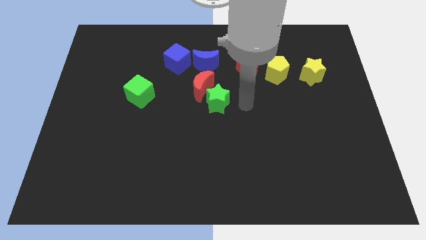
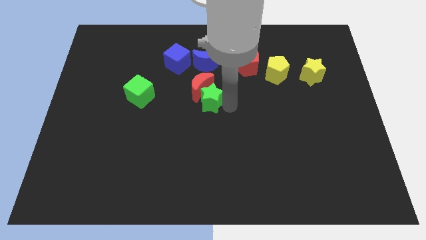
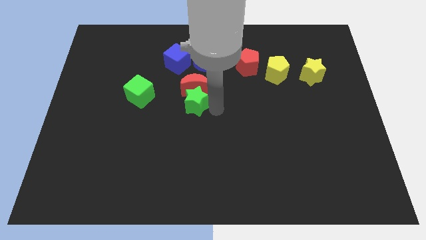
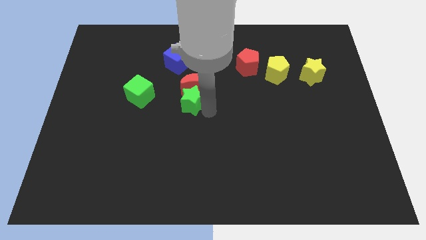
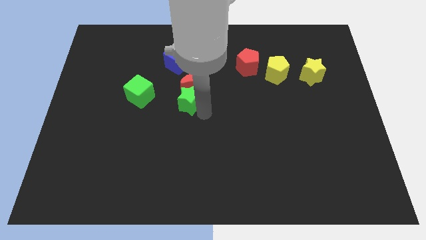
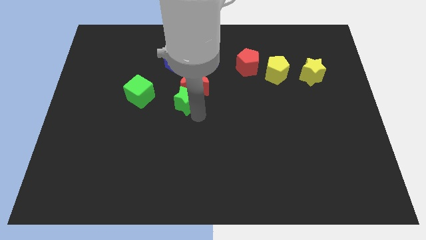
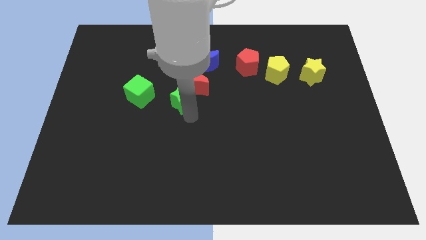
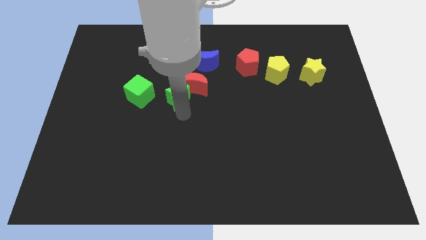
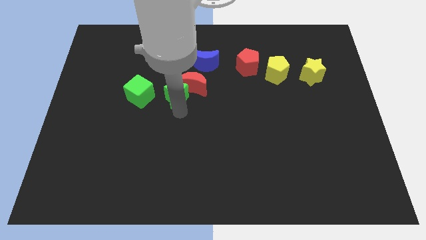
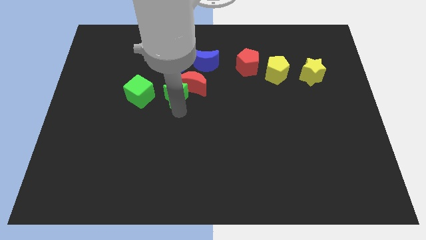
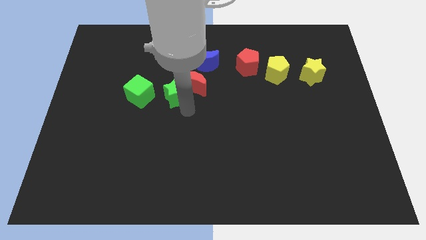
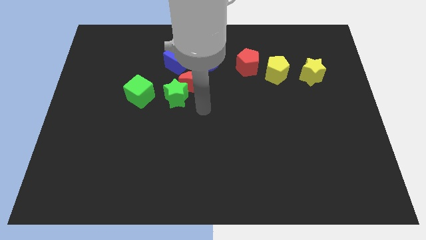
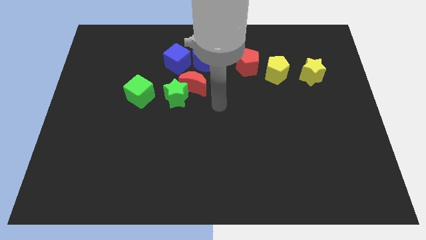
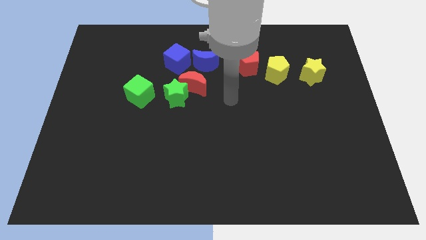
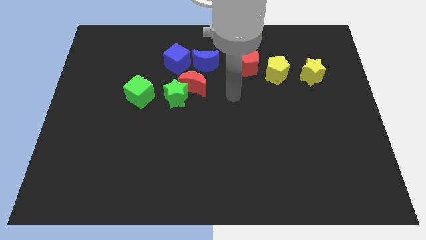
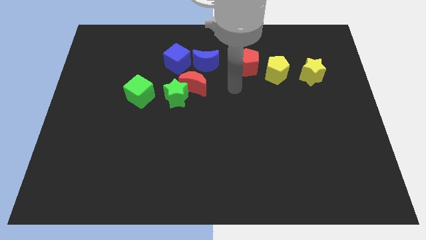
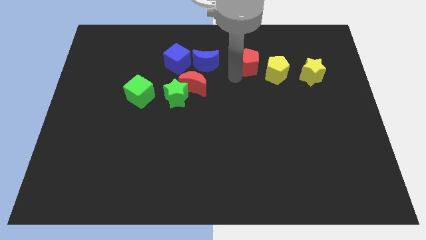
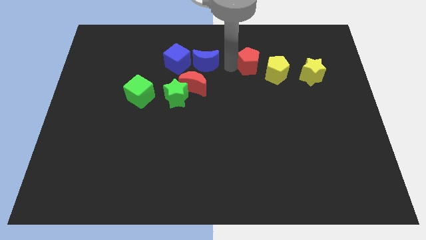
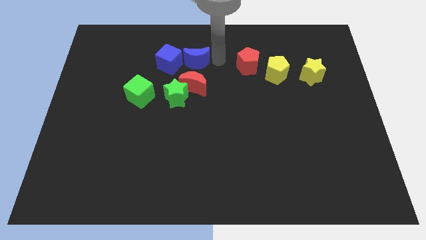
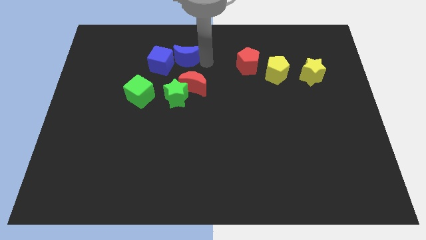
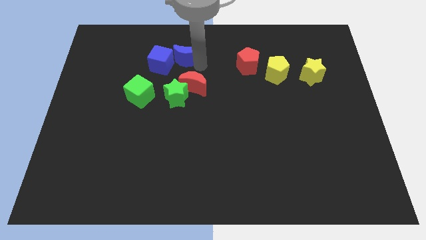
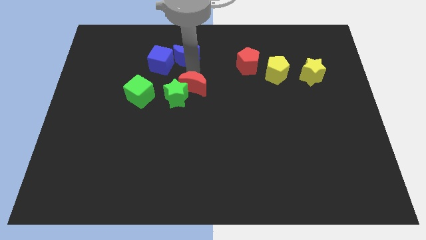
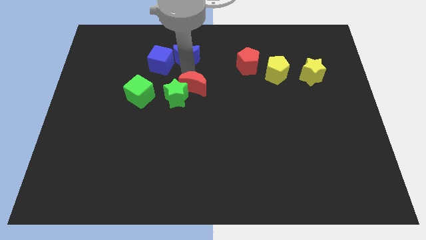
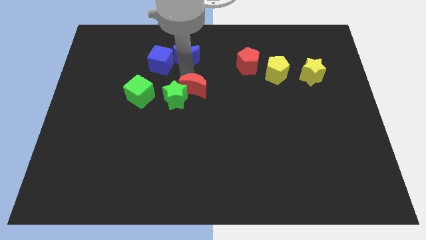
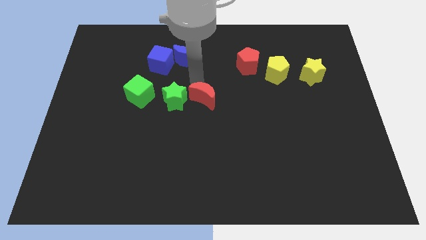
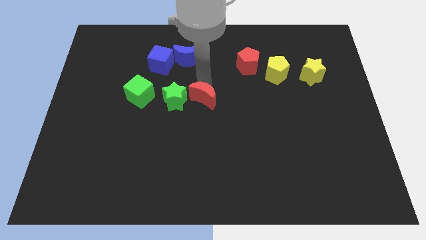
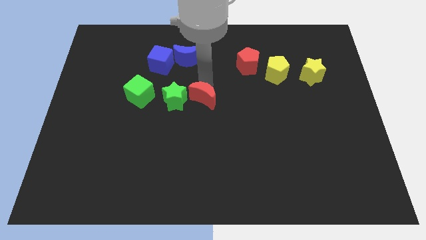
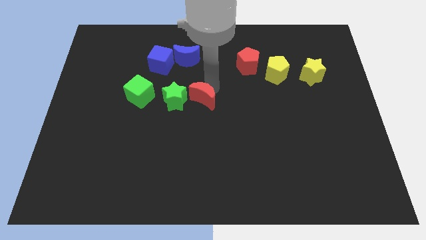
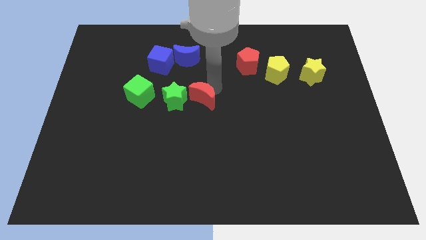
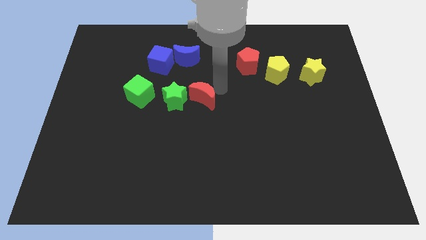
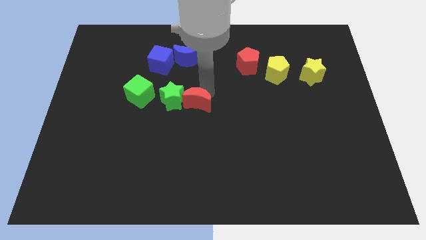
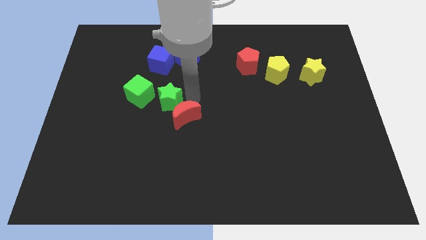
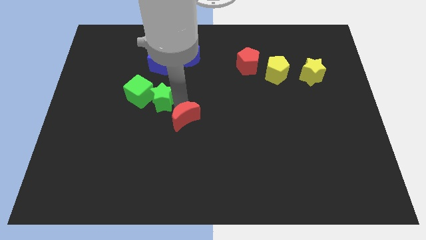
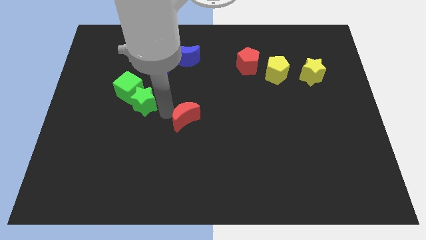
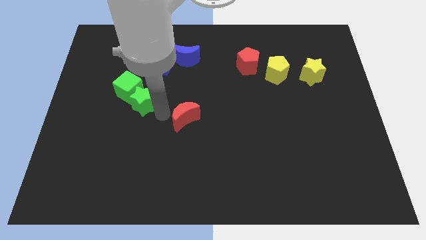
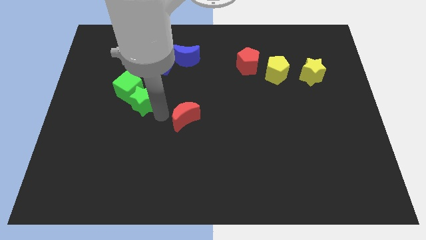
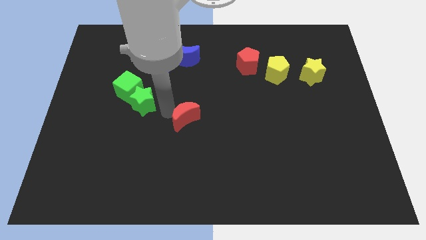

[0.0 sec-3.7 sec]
move the green star to the bottom side of green cube

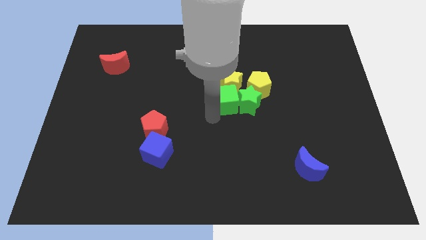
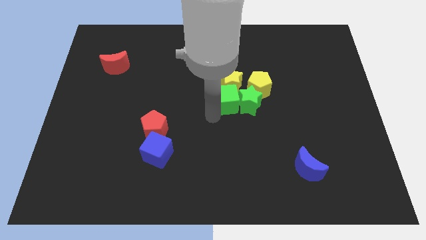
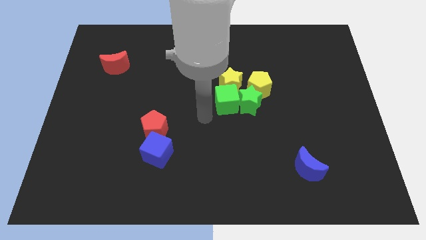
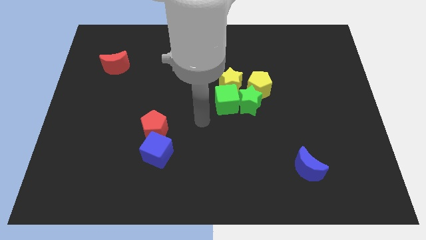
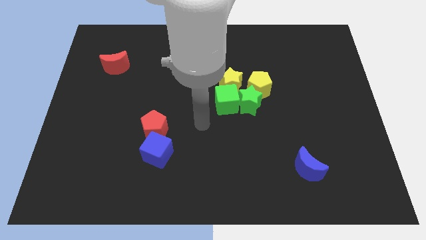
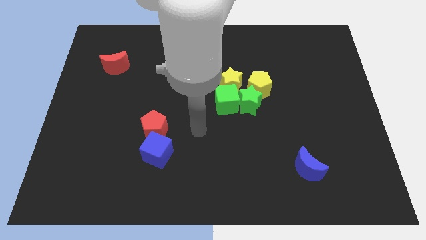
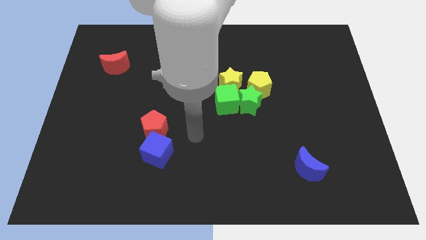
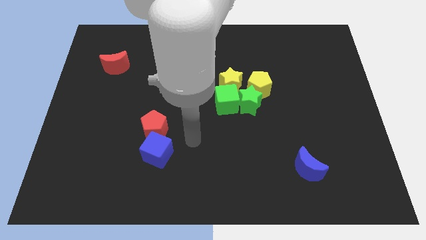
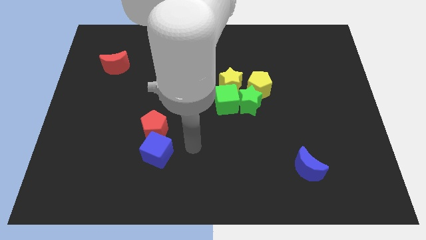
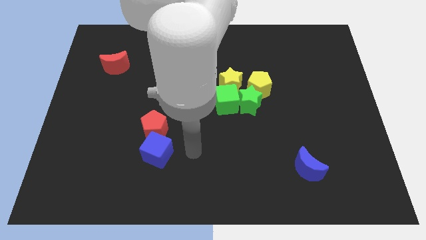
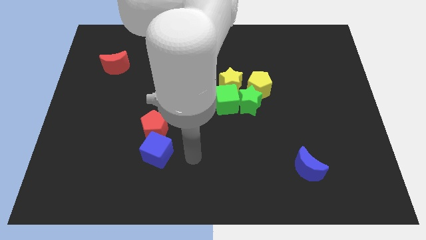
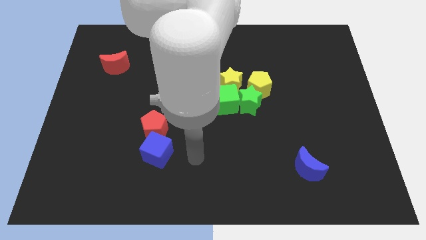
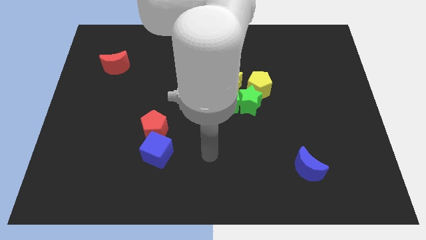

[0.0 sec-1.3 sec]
move your arm away from green cube

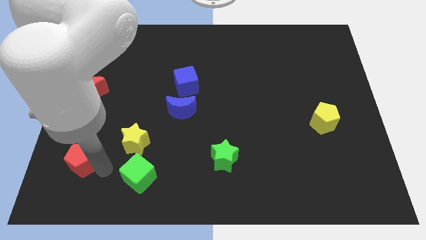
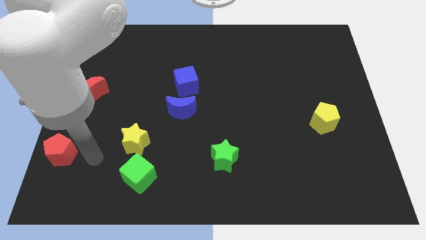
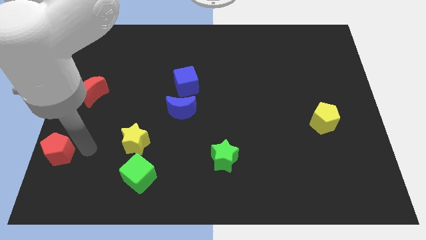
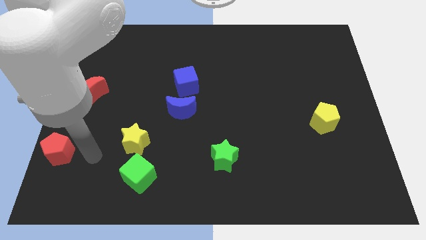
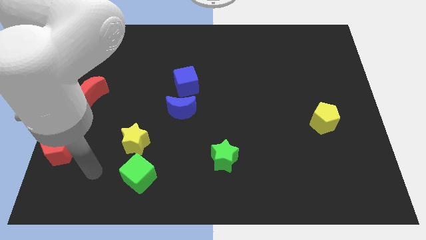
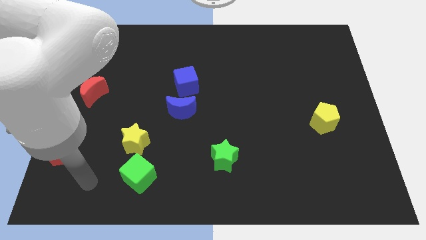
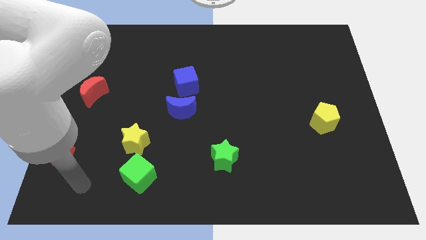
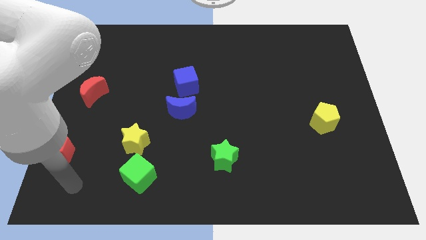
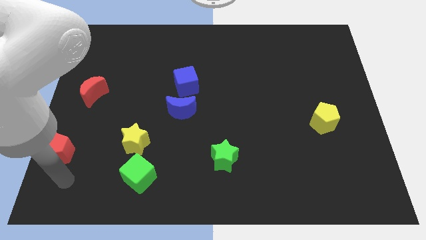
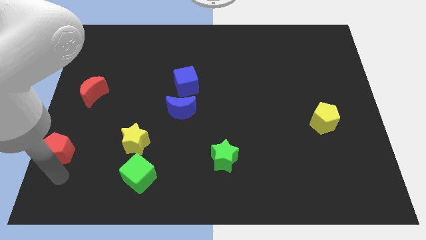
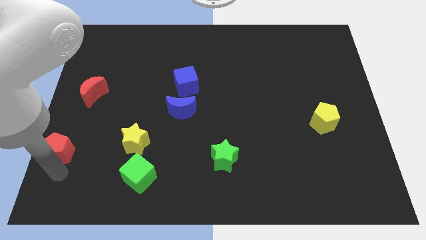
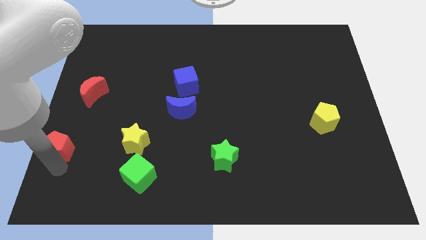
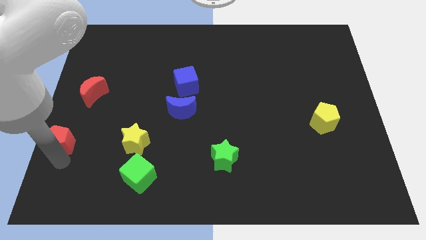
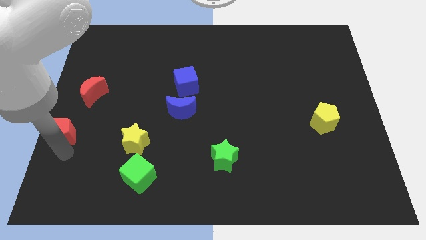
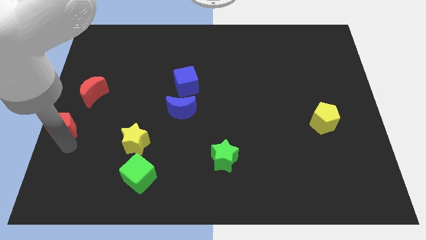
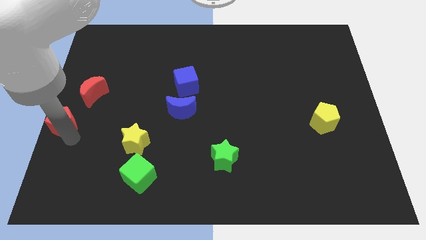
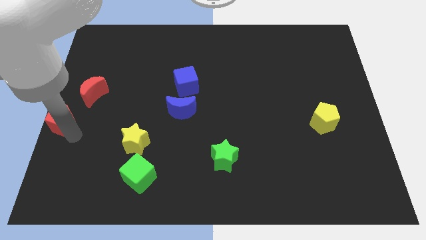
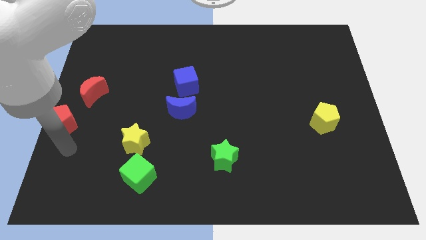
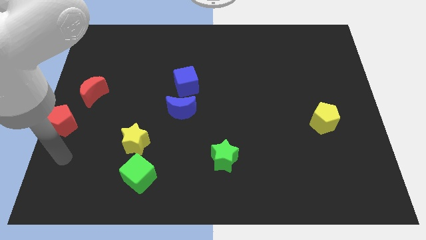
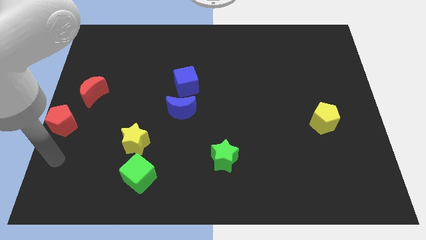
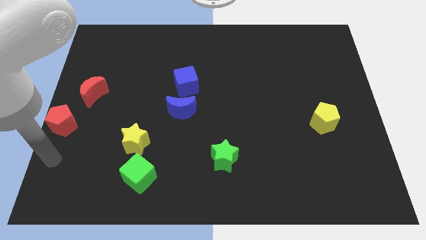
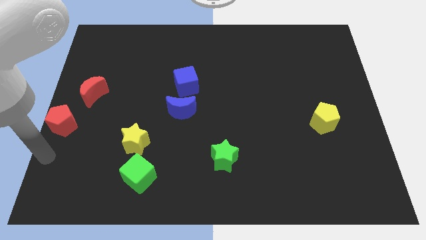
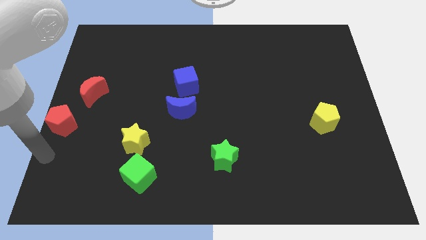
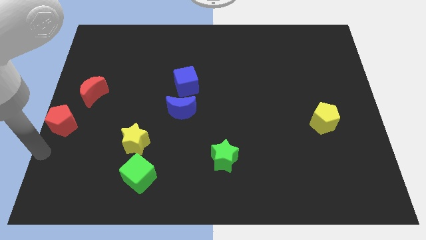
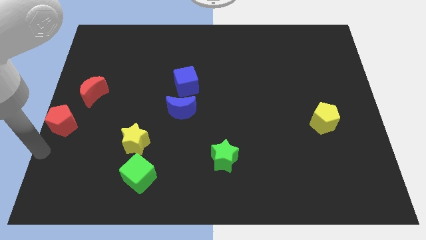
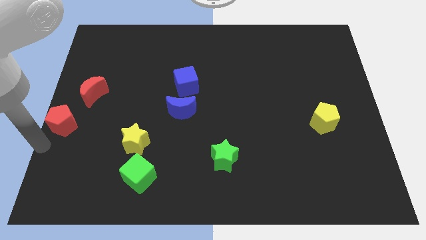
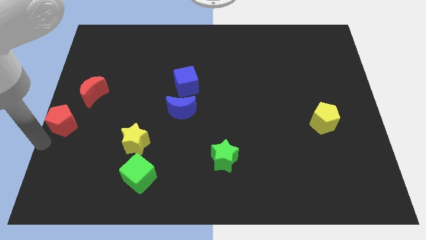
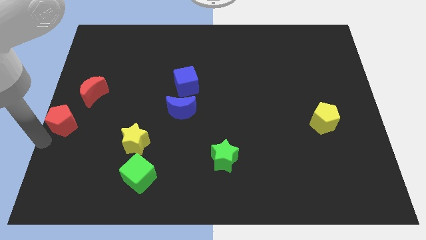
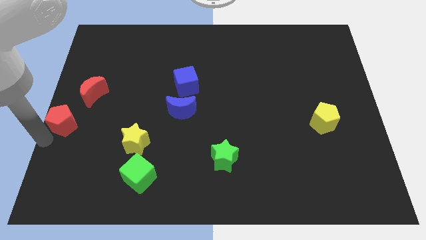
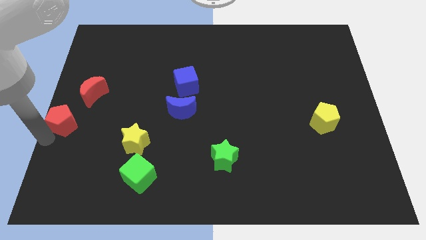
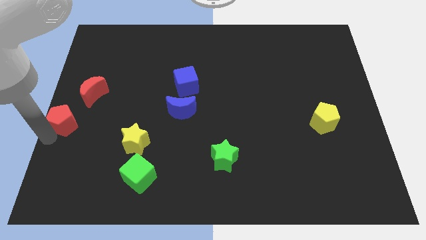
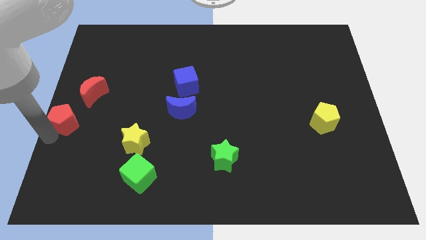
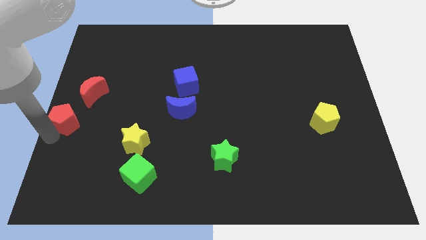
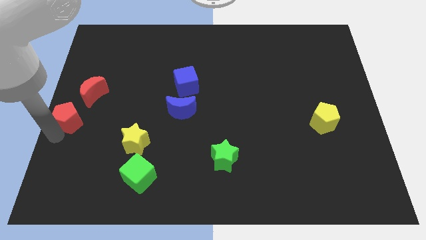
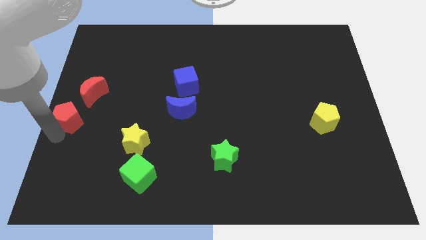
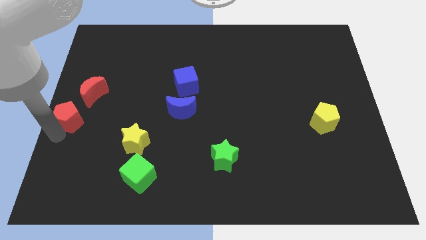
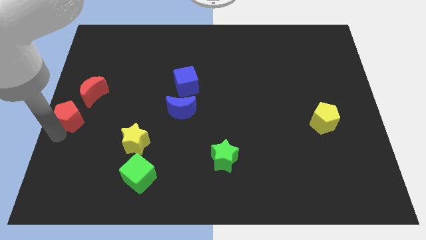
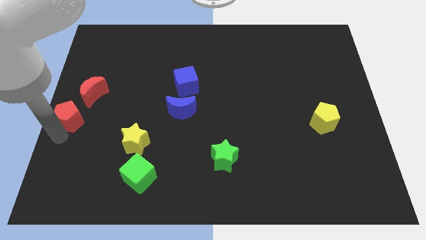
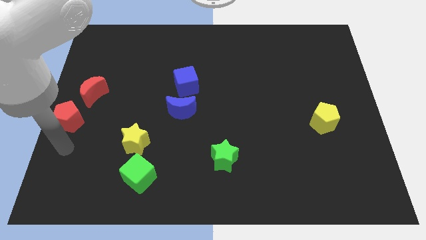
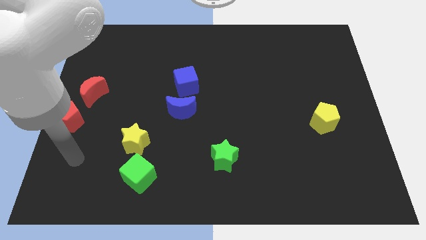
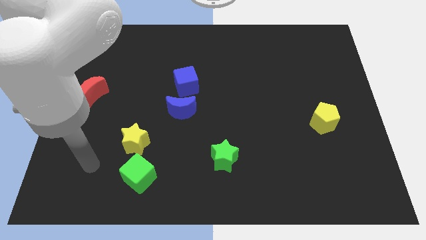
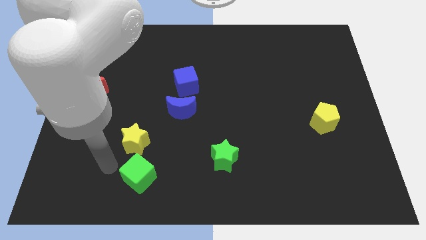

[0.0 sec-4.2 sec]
place the red pentagon at the center left corner
